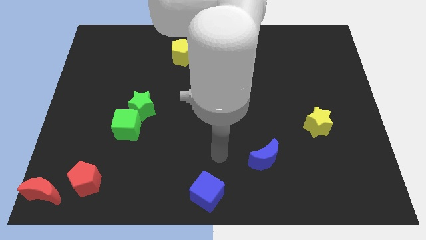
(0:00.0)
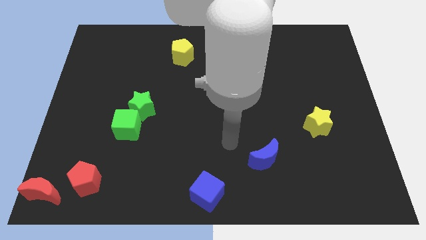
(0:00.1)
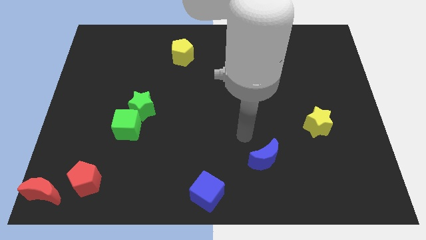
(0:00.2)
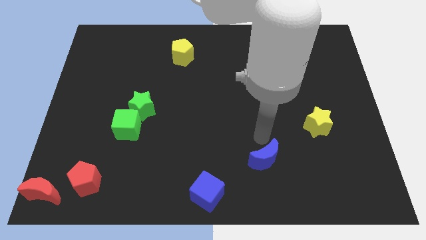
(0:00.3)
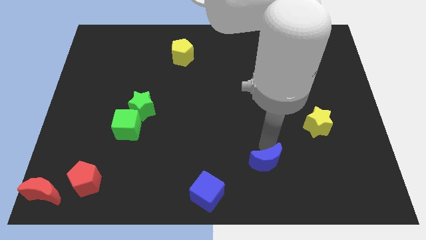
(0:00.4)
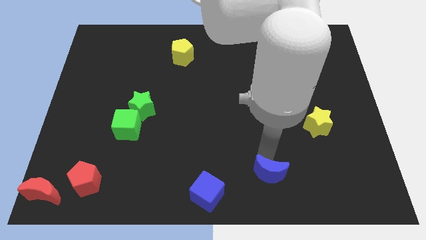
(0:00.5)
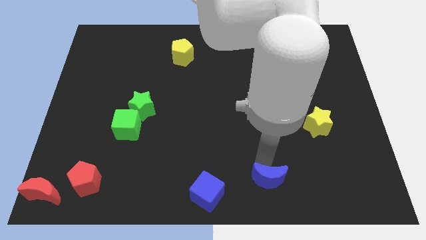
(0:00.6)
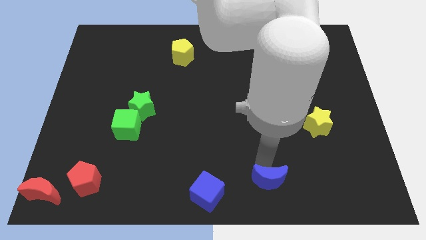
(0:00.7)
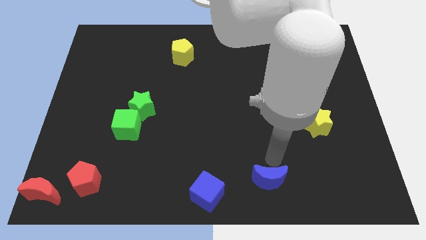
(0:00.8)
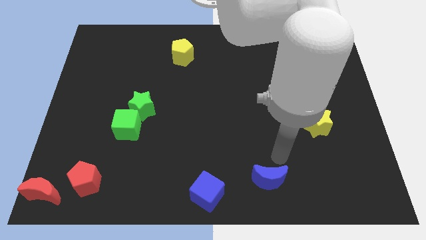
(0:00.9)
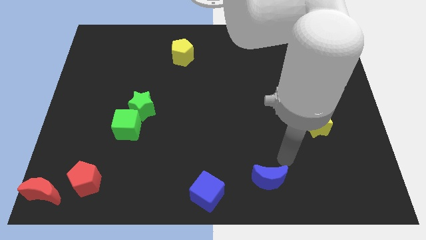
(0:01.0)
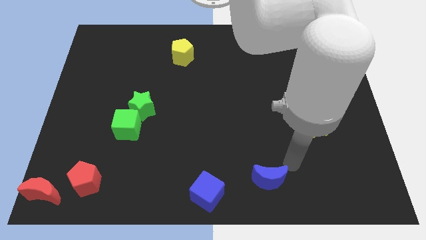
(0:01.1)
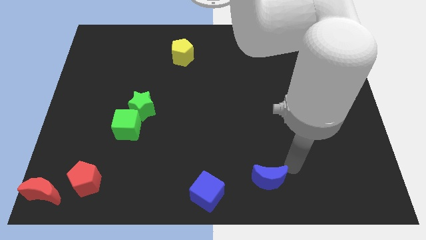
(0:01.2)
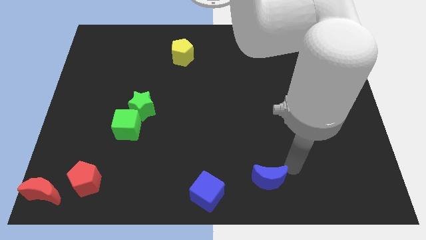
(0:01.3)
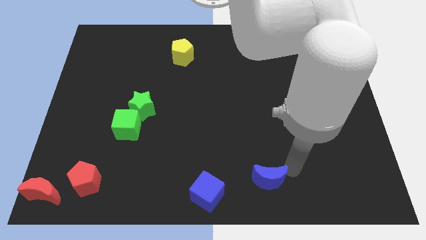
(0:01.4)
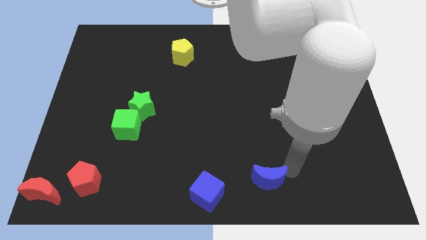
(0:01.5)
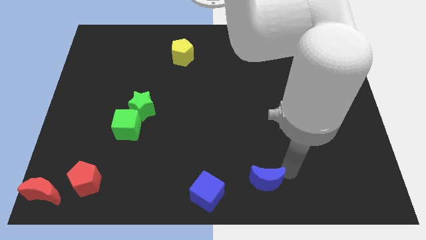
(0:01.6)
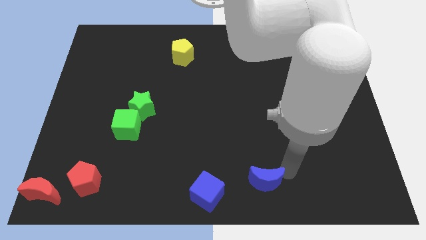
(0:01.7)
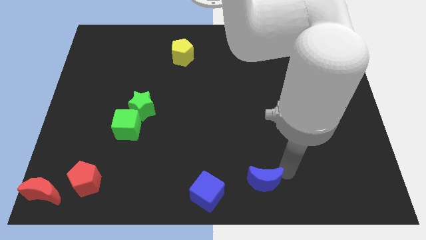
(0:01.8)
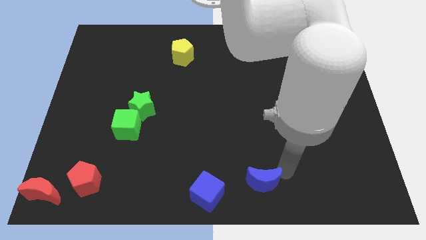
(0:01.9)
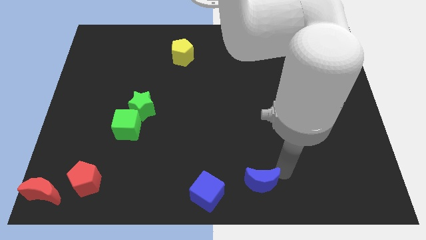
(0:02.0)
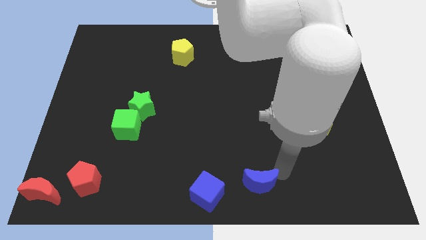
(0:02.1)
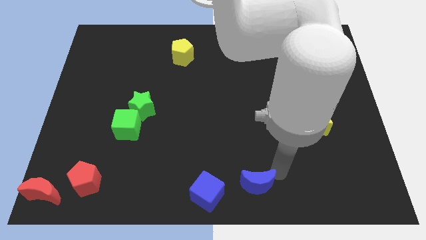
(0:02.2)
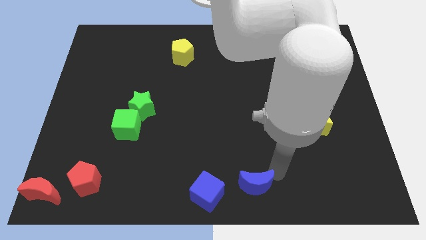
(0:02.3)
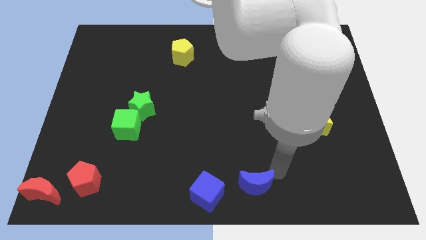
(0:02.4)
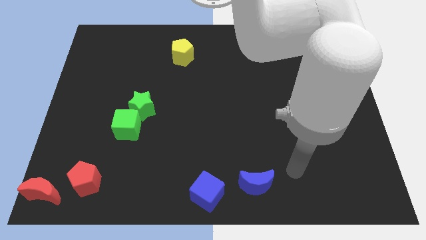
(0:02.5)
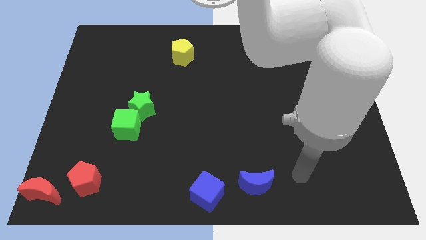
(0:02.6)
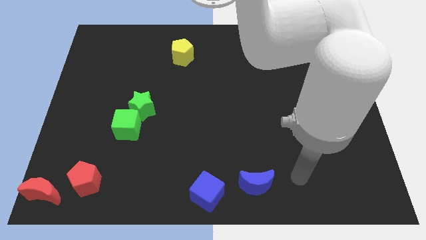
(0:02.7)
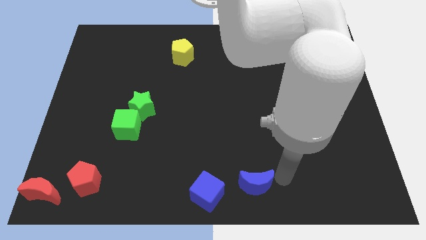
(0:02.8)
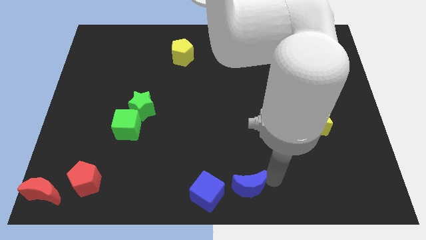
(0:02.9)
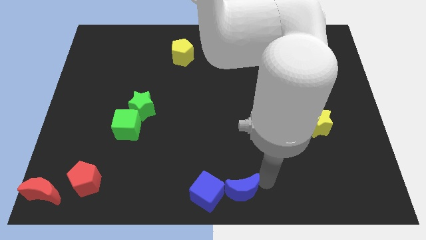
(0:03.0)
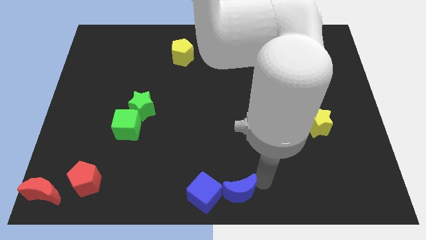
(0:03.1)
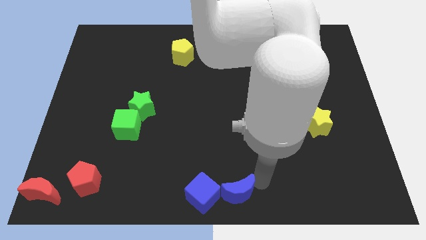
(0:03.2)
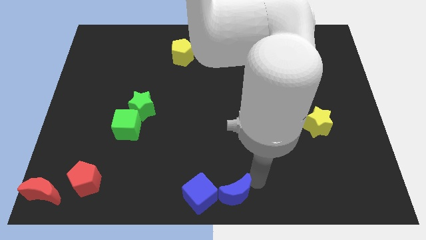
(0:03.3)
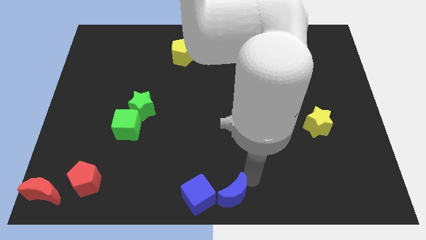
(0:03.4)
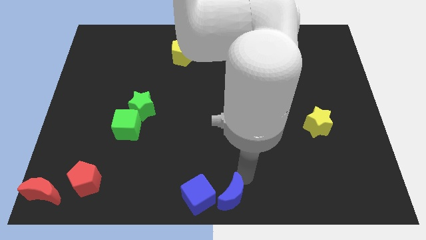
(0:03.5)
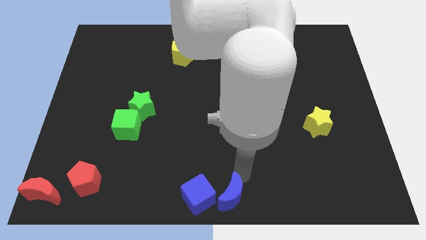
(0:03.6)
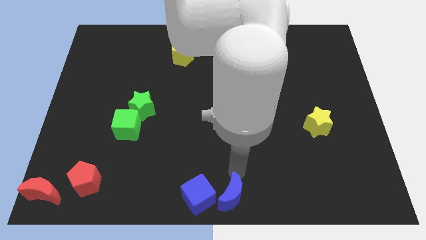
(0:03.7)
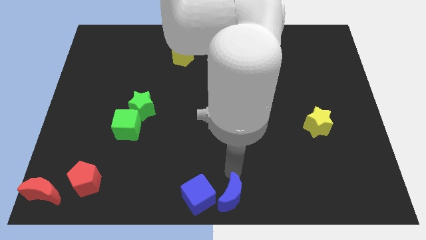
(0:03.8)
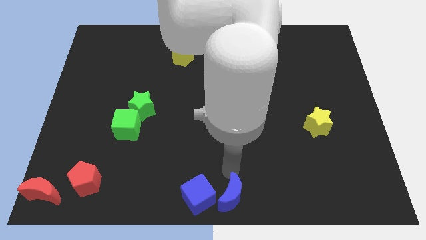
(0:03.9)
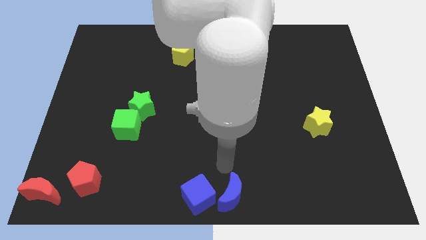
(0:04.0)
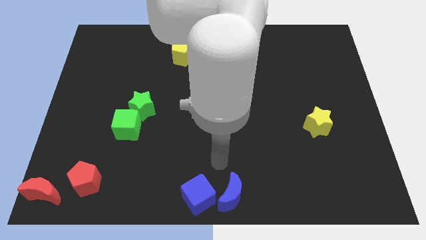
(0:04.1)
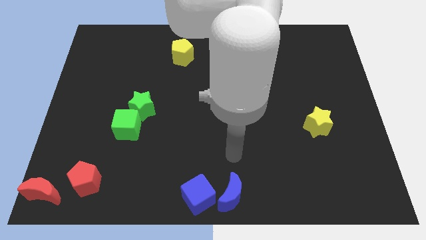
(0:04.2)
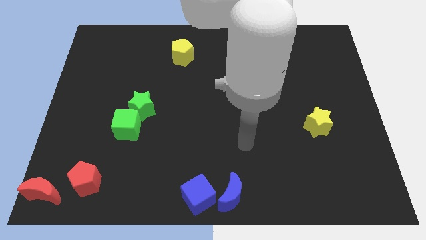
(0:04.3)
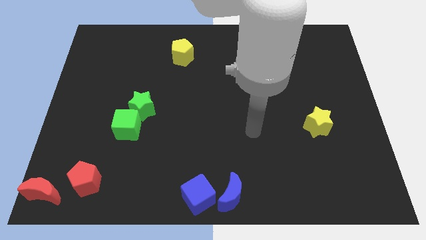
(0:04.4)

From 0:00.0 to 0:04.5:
move the blue moon into the blue cube

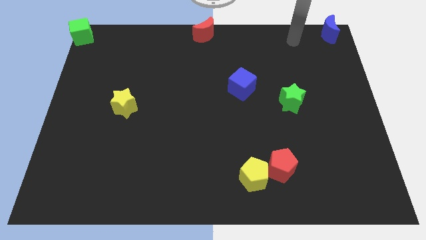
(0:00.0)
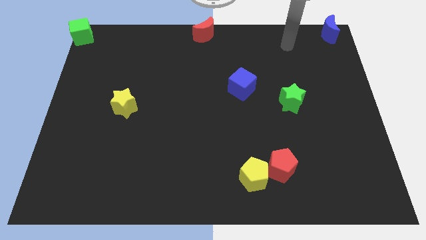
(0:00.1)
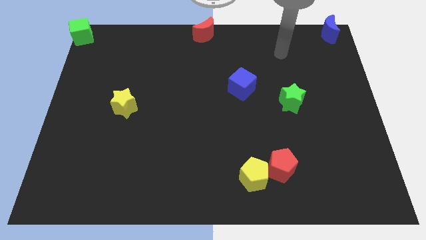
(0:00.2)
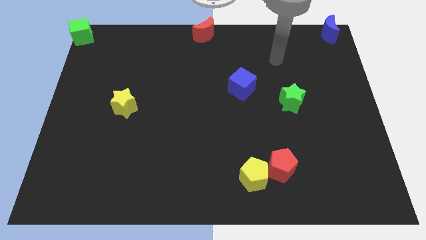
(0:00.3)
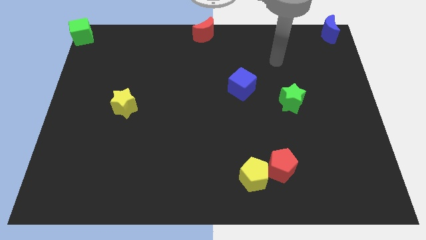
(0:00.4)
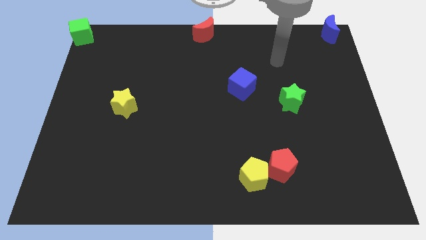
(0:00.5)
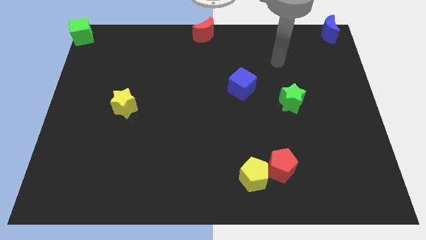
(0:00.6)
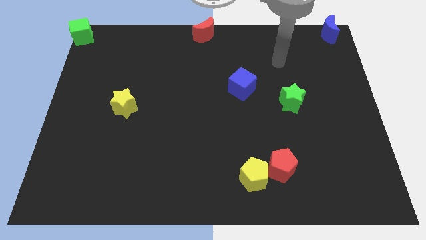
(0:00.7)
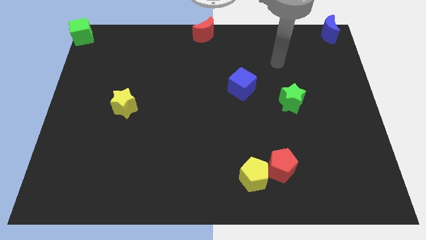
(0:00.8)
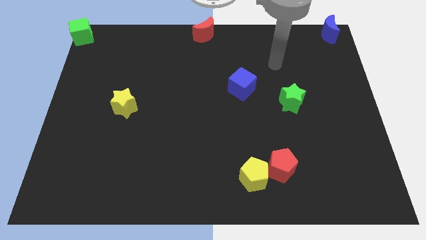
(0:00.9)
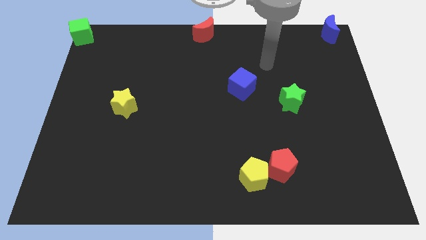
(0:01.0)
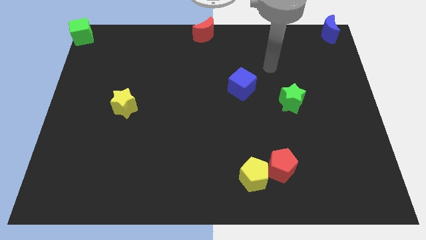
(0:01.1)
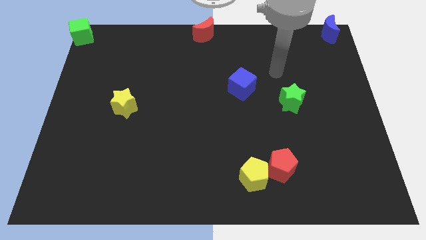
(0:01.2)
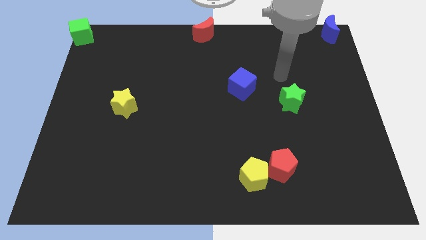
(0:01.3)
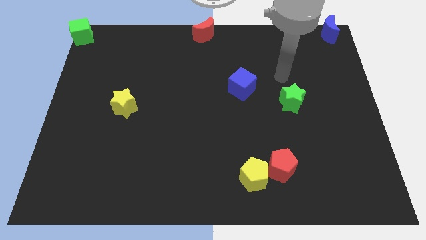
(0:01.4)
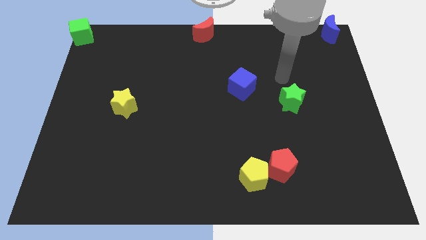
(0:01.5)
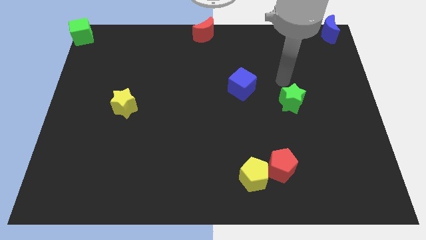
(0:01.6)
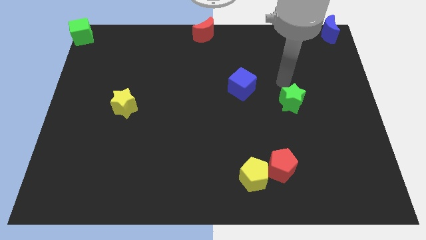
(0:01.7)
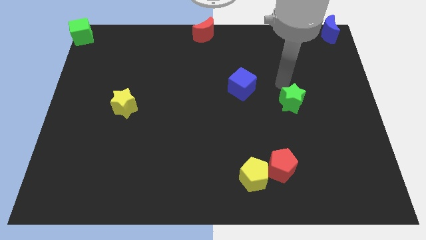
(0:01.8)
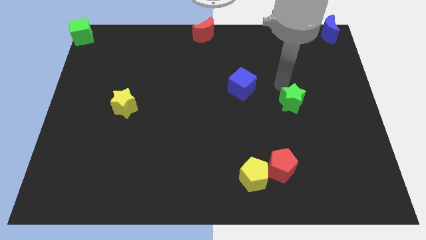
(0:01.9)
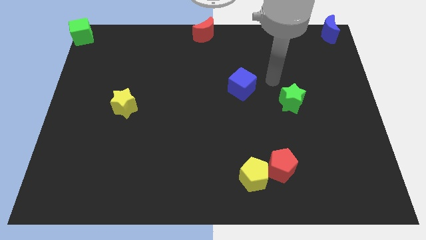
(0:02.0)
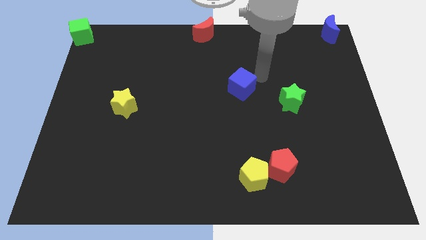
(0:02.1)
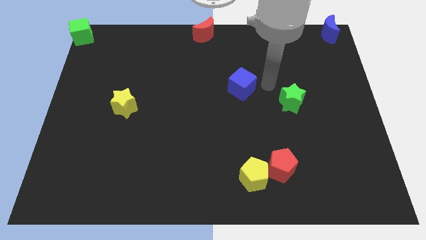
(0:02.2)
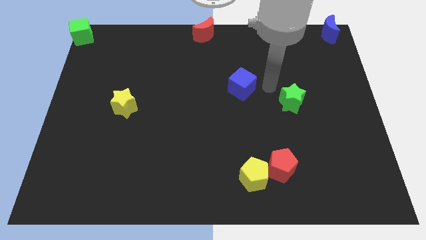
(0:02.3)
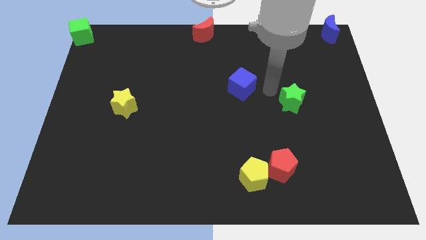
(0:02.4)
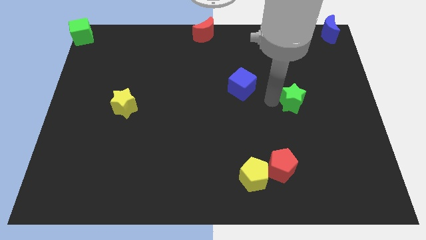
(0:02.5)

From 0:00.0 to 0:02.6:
point the arm in between the blue cube and the green star

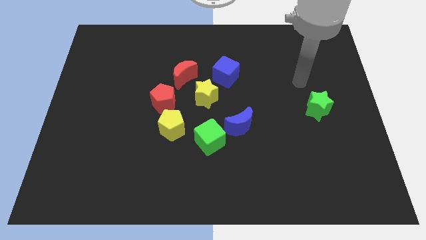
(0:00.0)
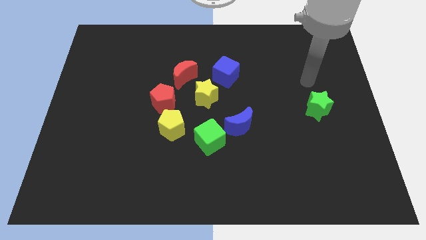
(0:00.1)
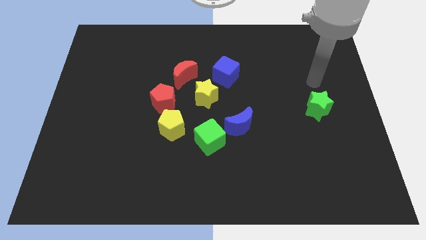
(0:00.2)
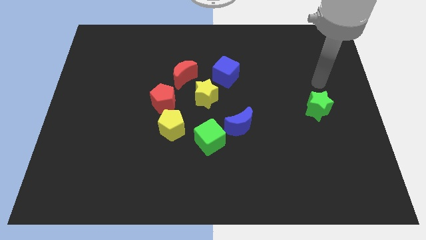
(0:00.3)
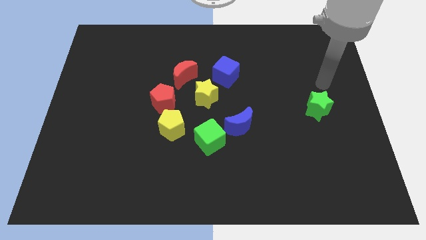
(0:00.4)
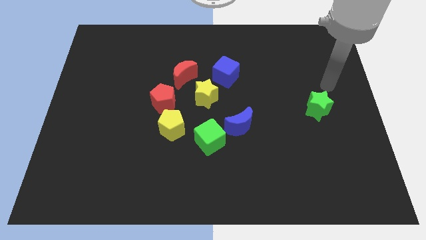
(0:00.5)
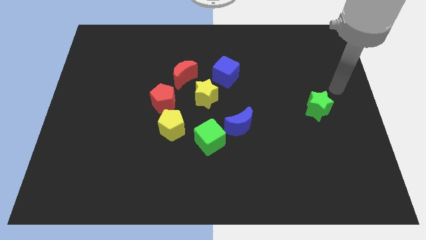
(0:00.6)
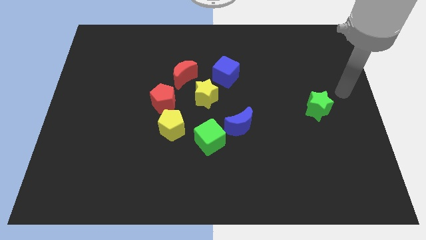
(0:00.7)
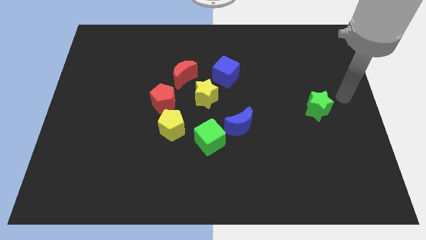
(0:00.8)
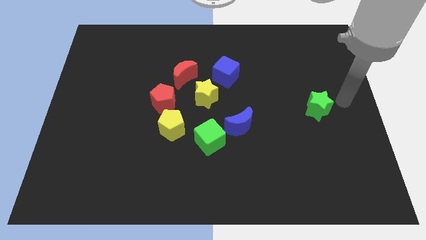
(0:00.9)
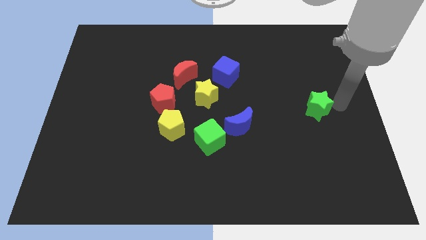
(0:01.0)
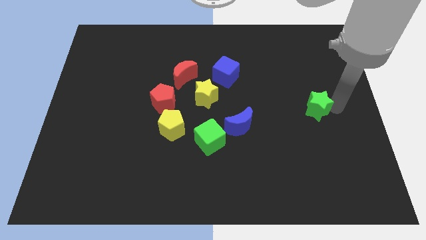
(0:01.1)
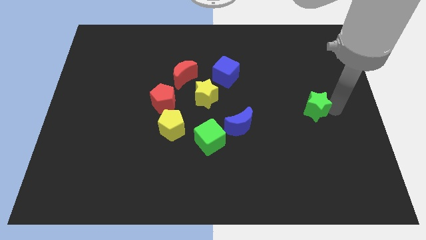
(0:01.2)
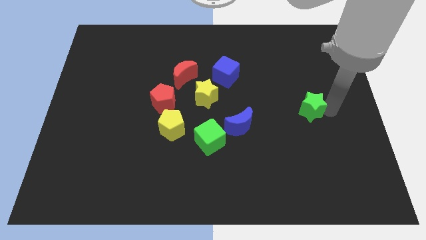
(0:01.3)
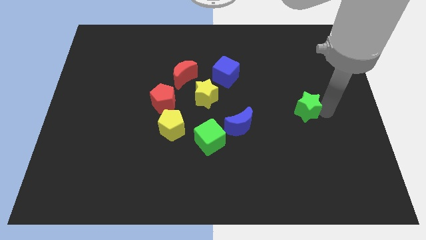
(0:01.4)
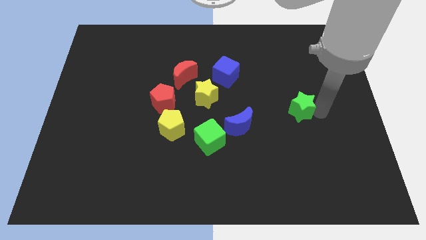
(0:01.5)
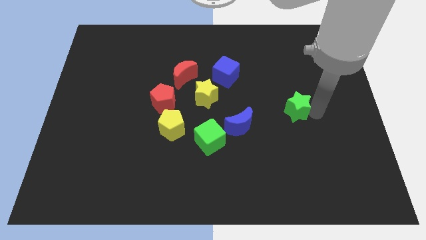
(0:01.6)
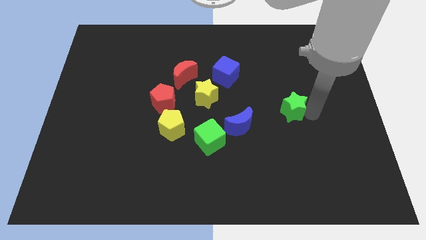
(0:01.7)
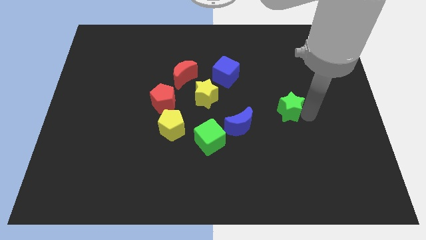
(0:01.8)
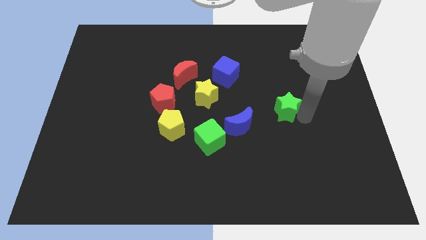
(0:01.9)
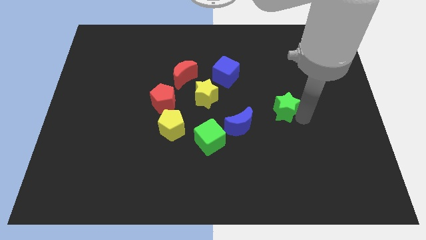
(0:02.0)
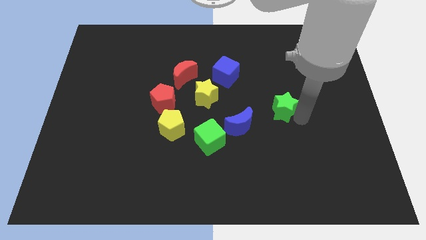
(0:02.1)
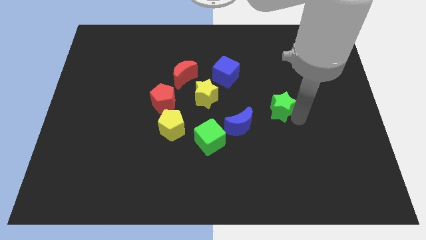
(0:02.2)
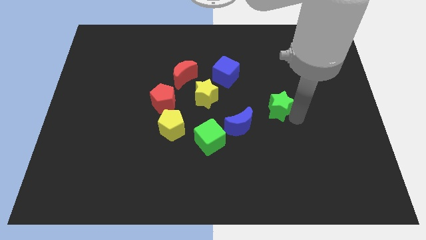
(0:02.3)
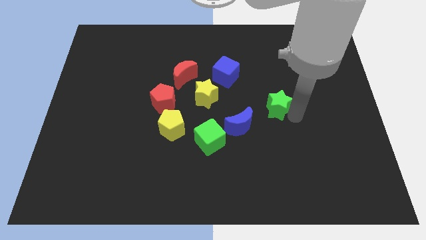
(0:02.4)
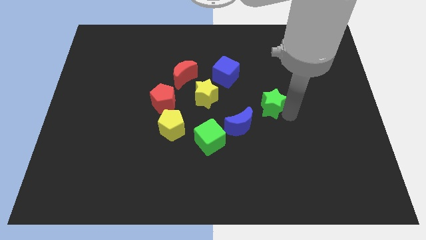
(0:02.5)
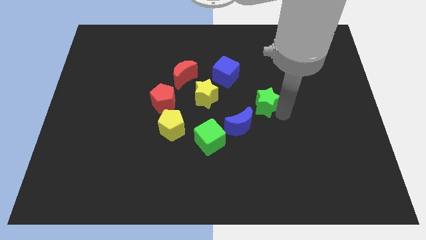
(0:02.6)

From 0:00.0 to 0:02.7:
move green star slightly left
